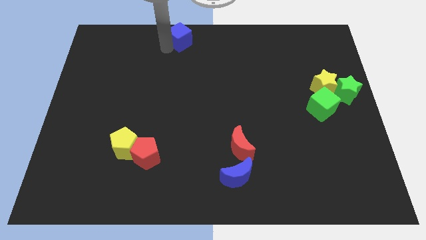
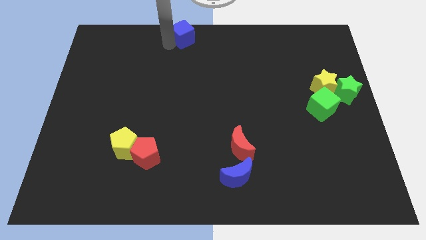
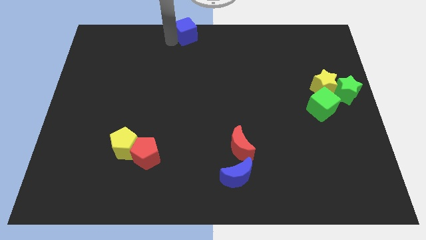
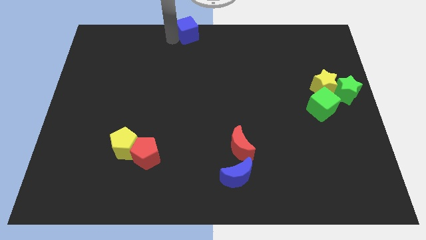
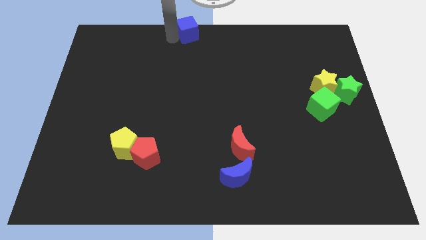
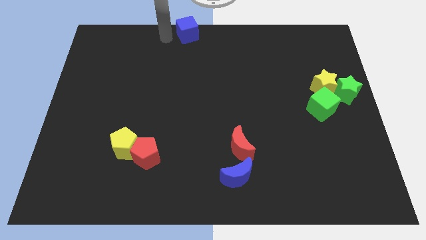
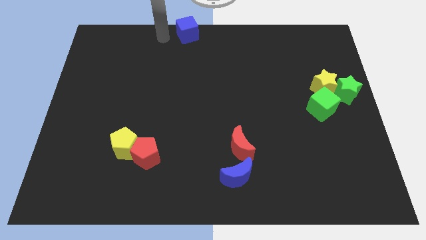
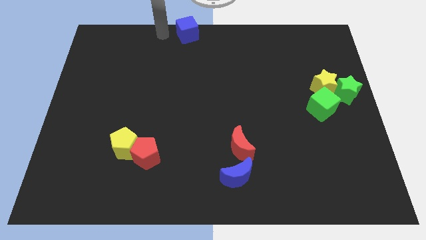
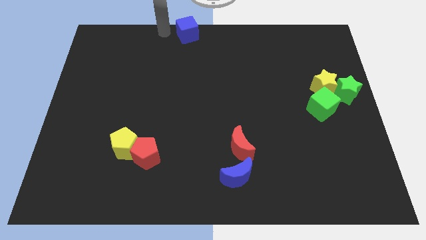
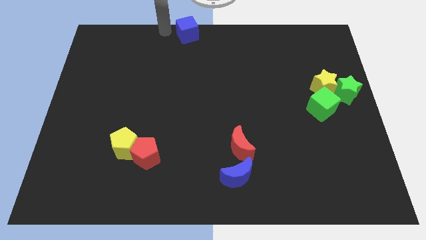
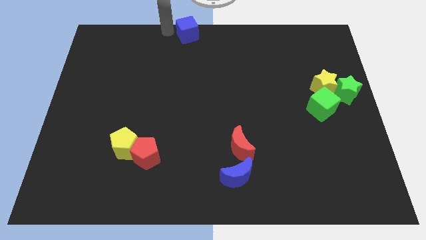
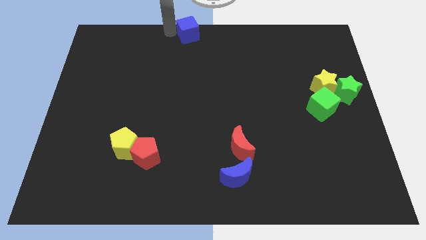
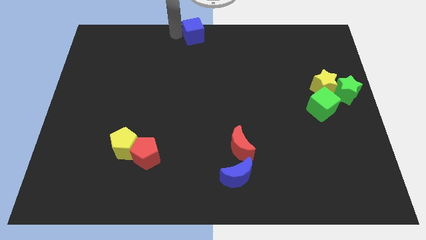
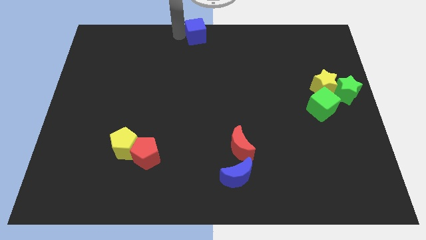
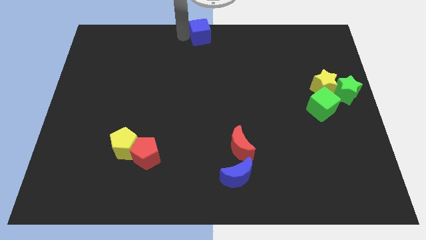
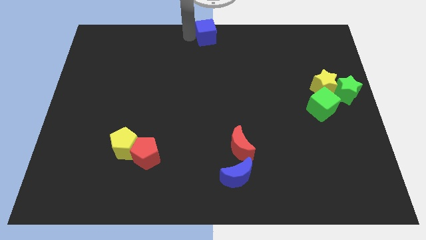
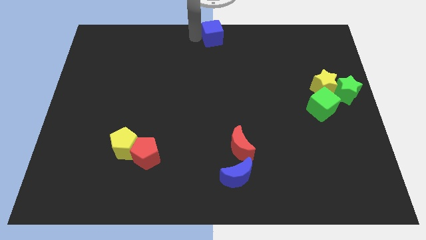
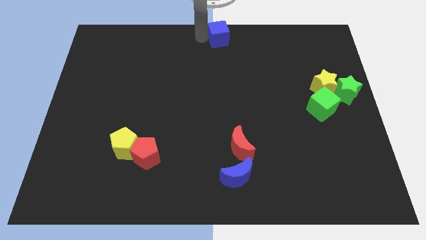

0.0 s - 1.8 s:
place the blue cube at the top center of the board

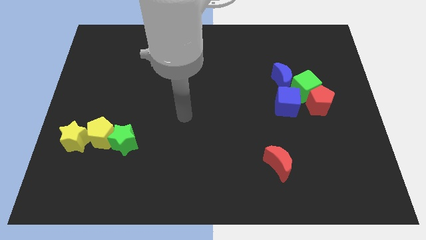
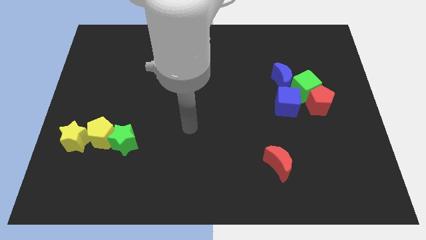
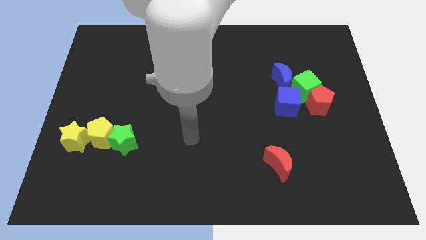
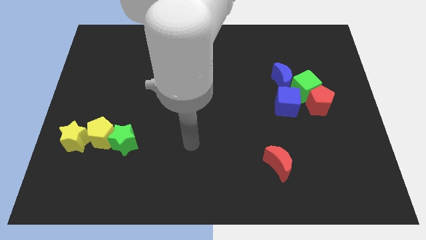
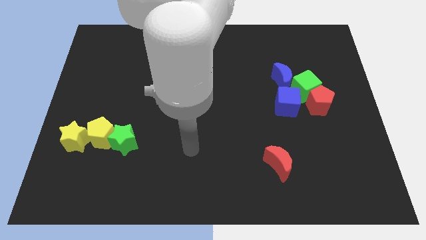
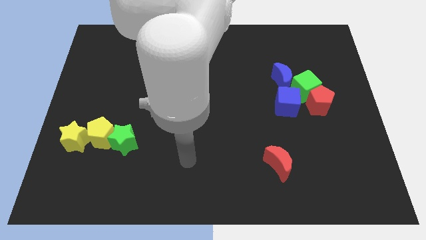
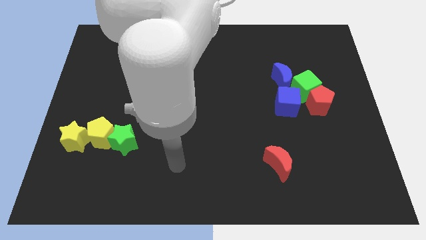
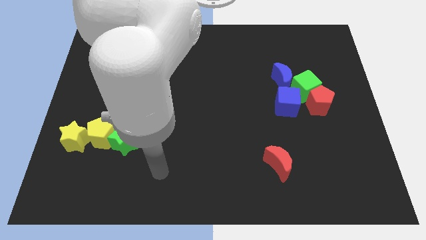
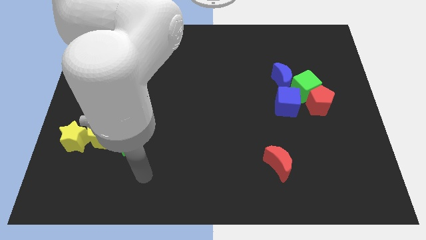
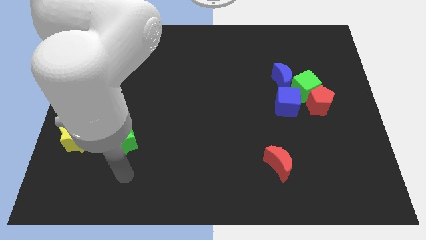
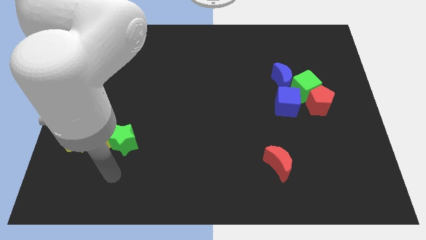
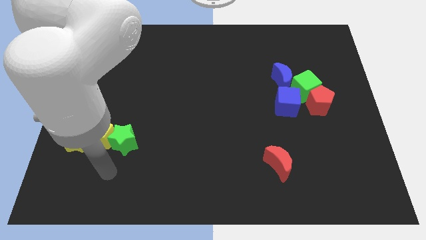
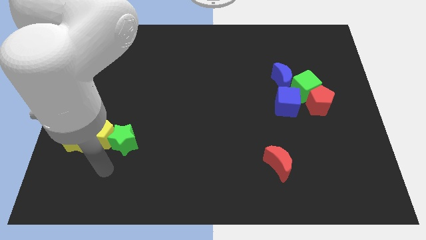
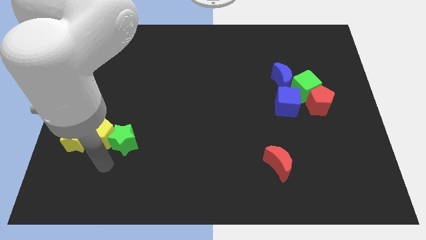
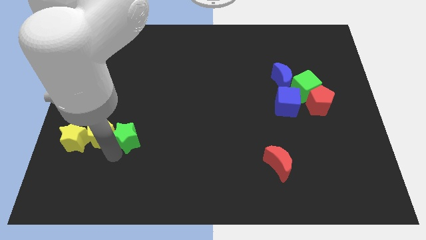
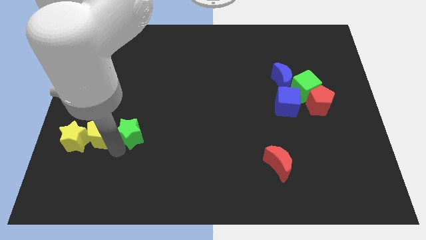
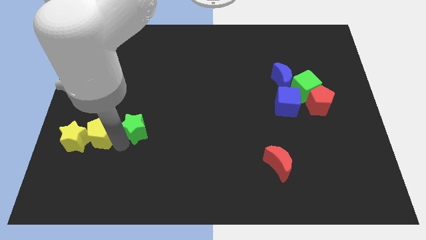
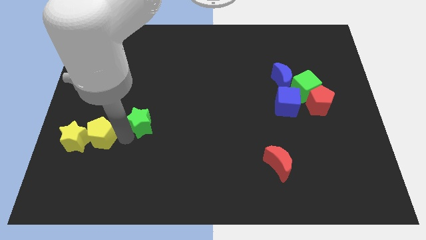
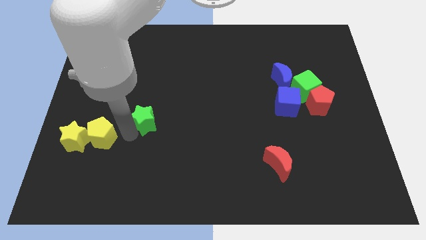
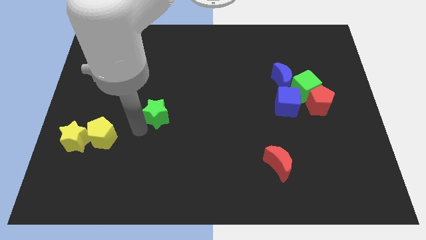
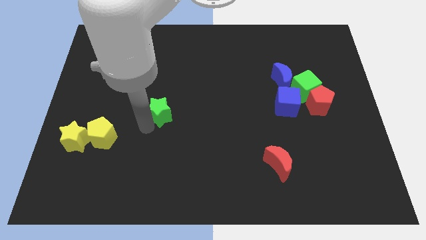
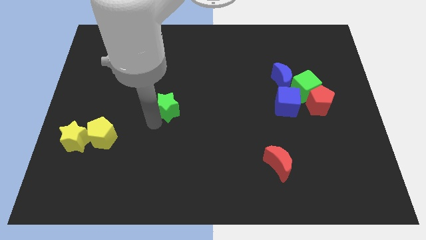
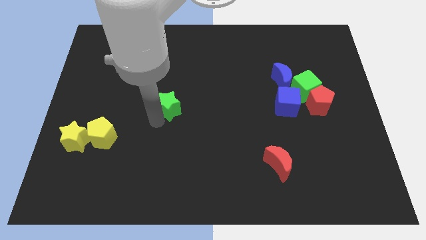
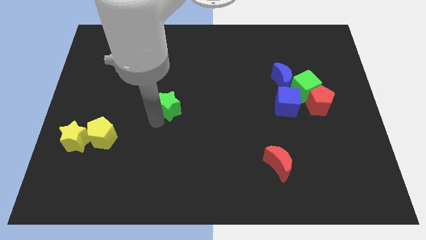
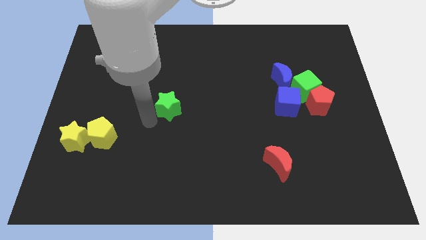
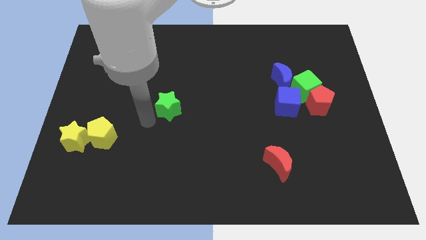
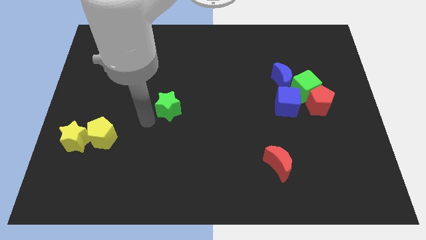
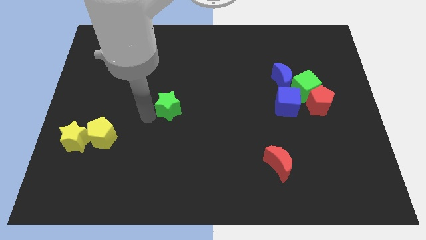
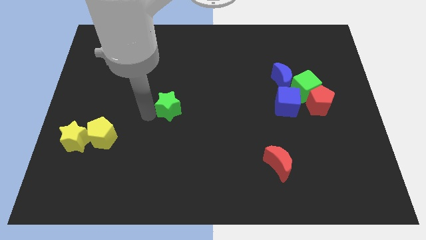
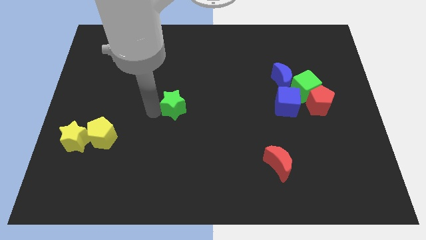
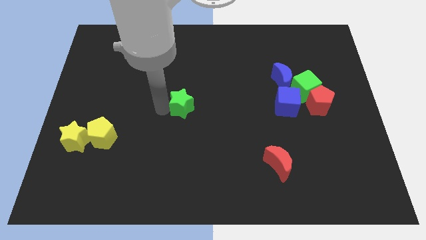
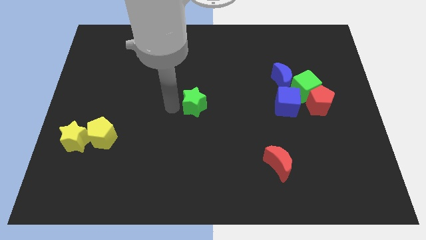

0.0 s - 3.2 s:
place green star to the left of blue cube

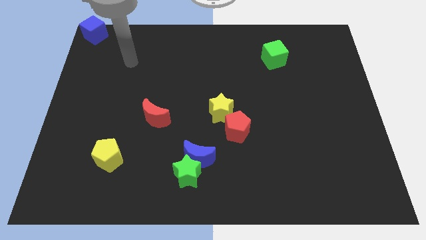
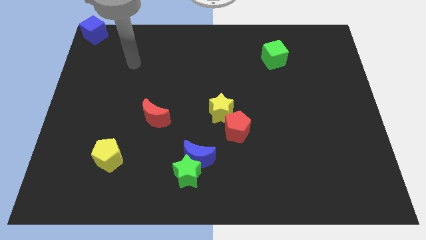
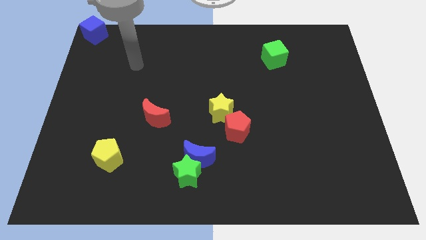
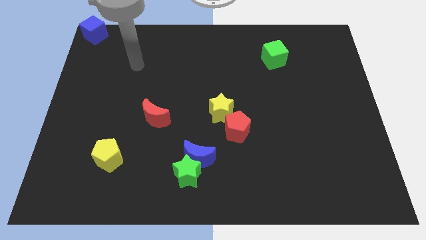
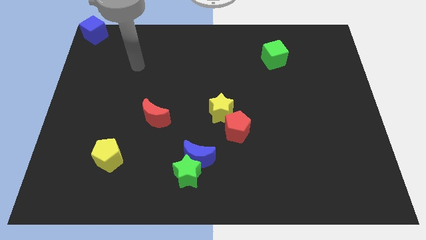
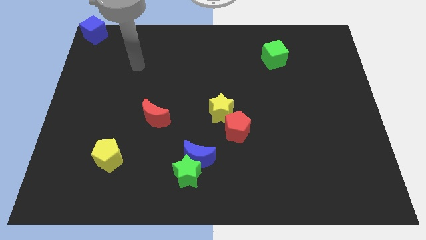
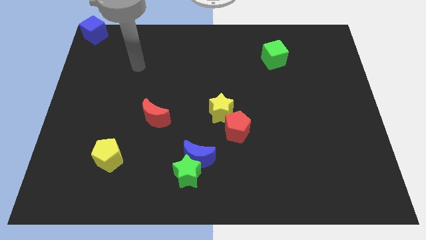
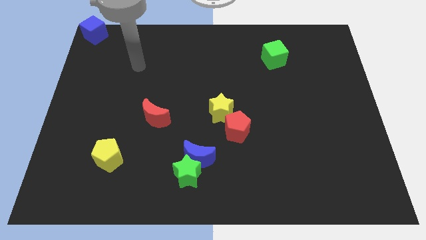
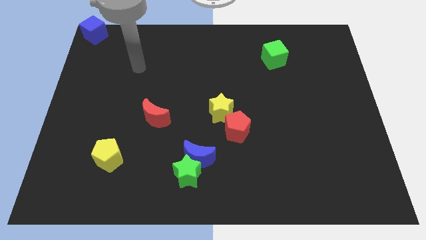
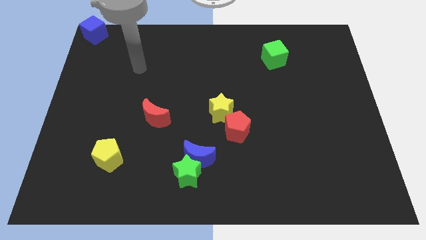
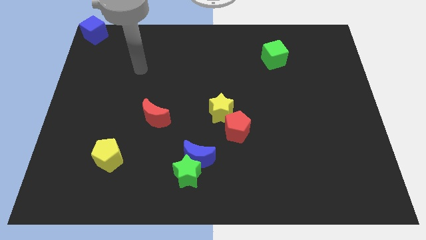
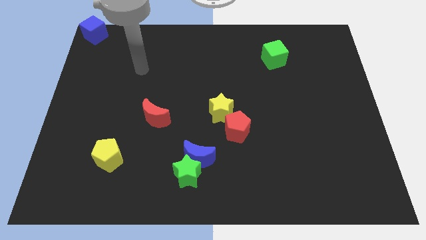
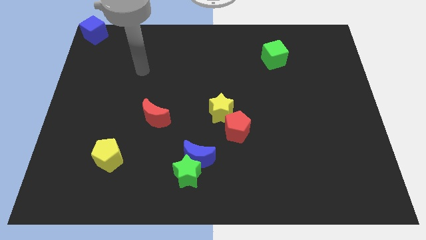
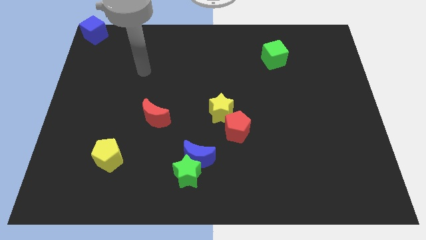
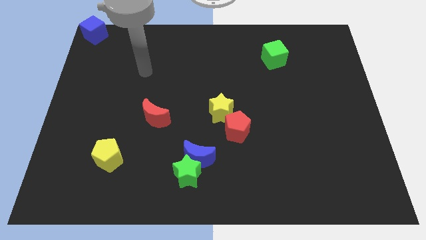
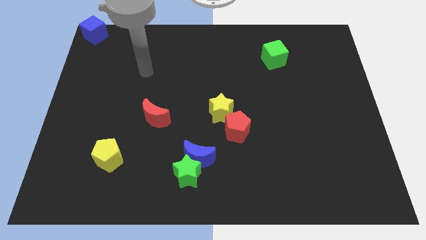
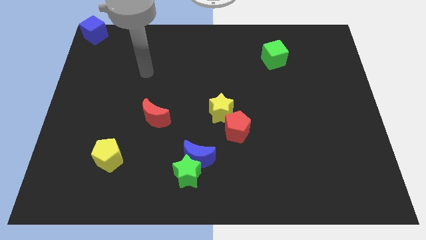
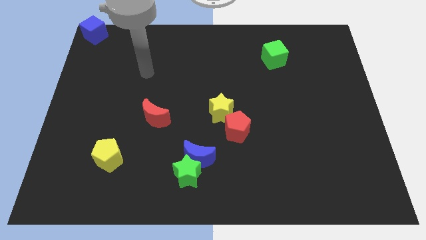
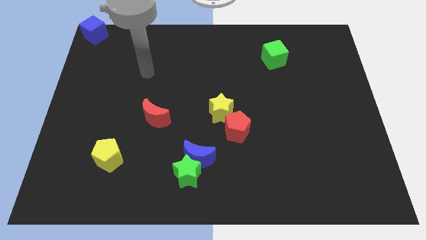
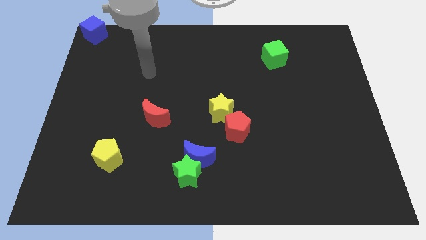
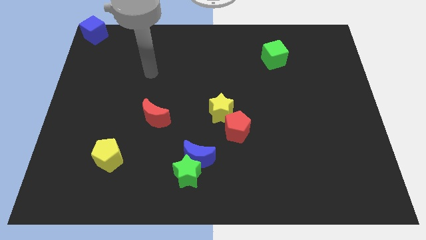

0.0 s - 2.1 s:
move robot arm slightly

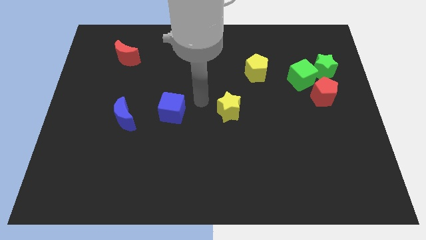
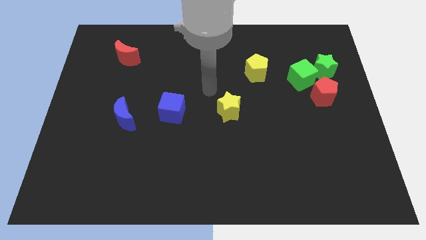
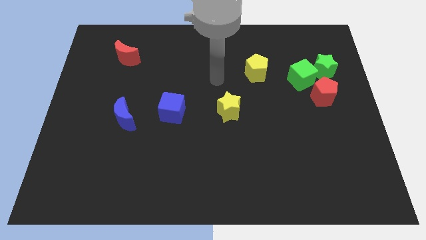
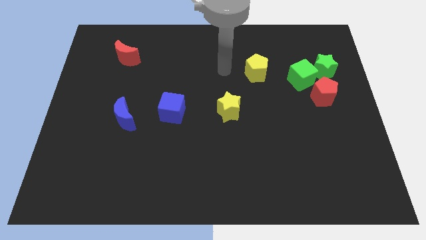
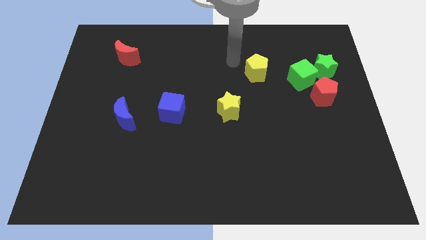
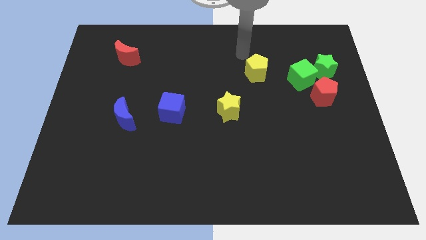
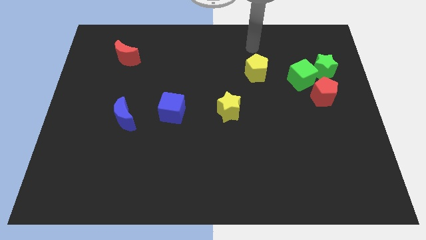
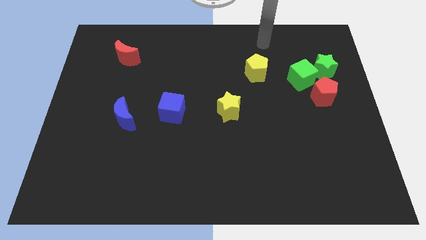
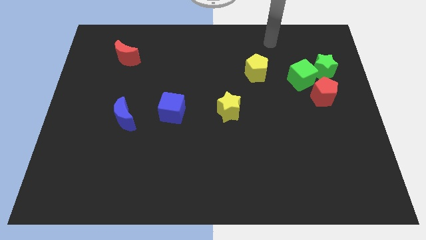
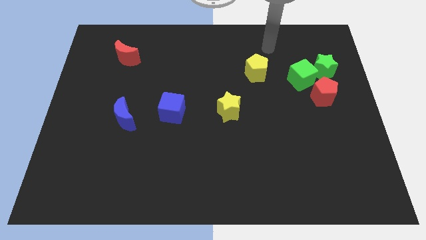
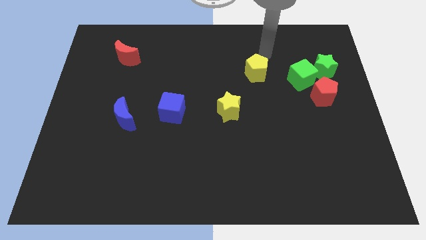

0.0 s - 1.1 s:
move your arm towards the yellow pentagon

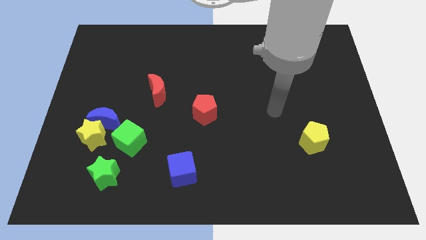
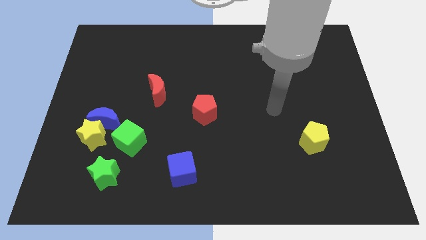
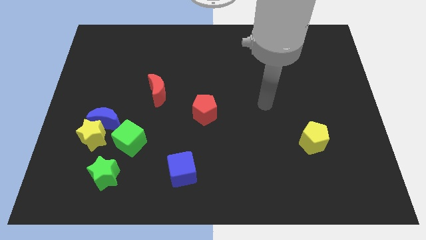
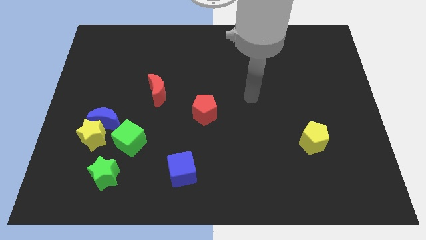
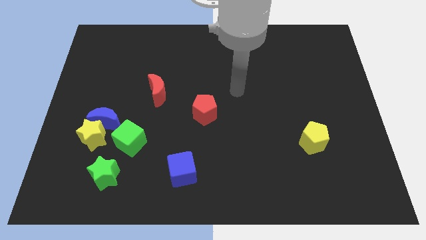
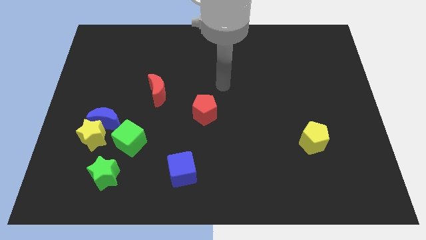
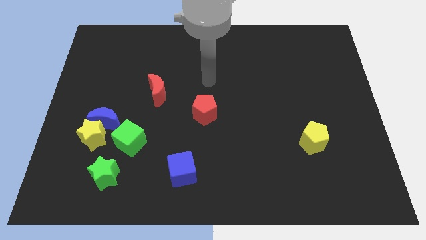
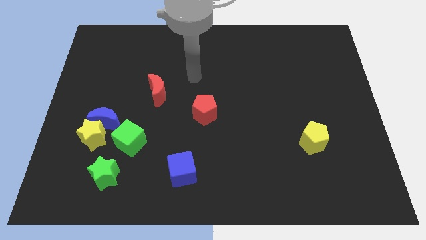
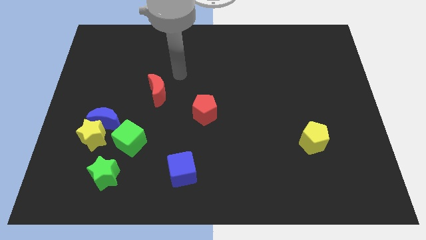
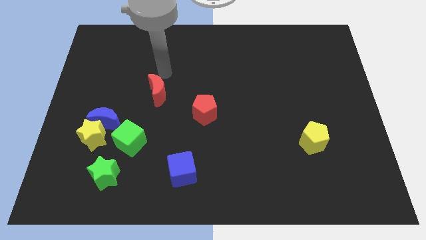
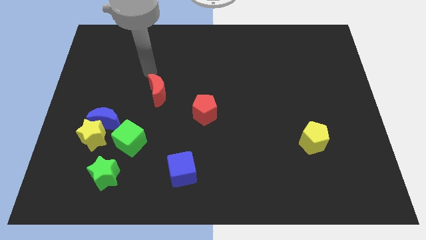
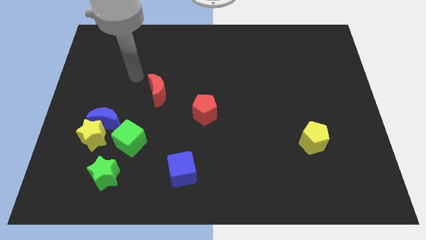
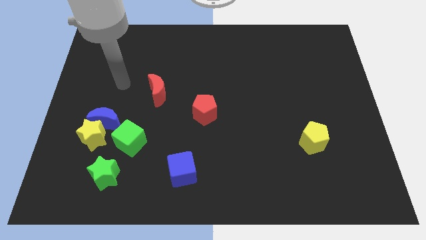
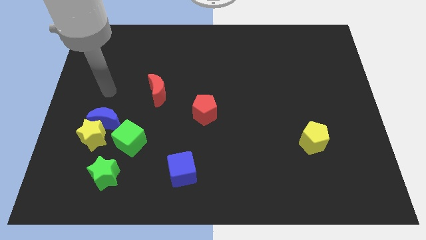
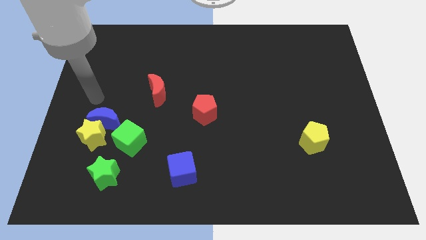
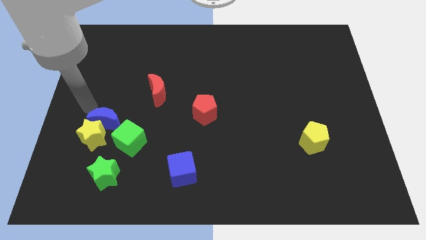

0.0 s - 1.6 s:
point your arm on top of the blue moon
